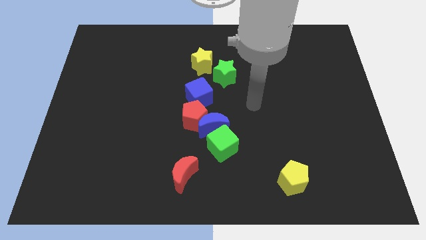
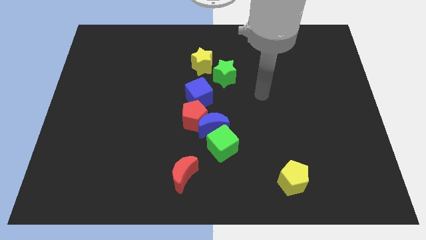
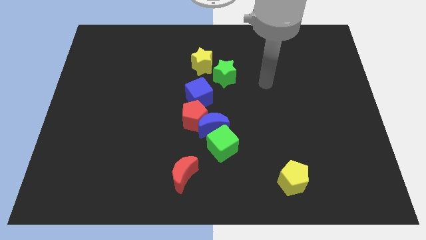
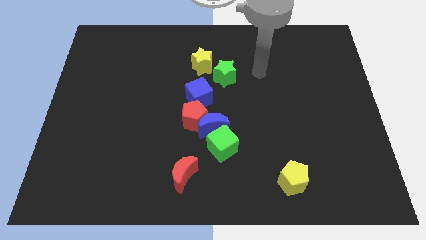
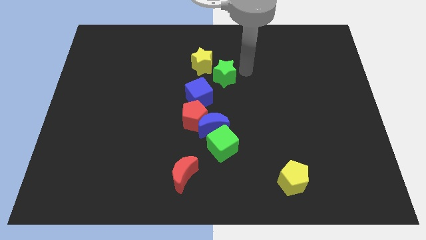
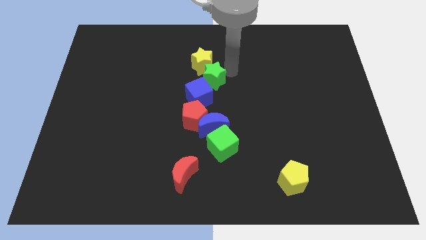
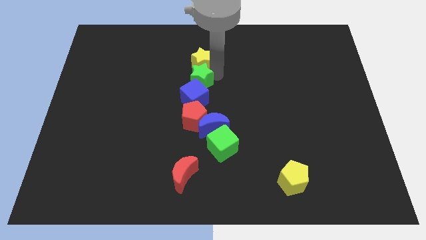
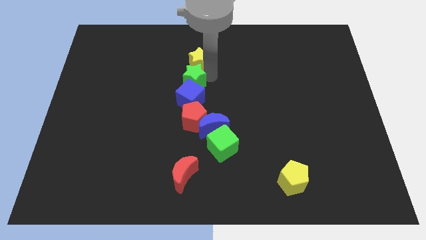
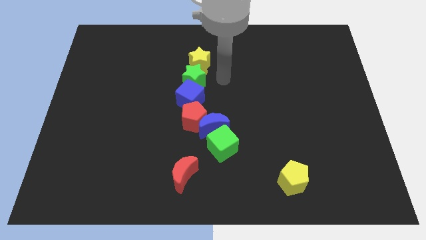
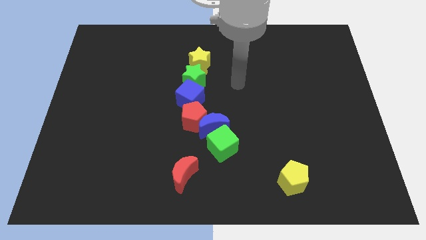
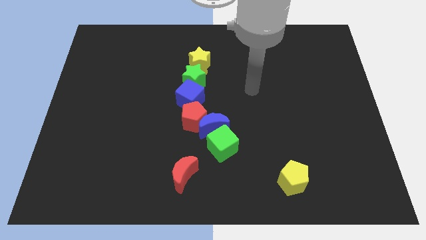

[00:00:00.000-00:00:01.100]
push green star close to yellow star

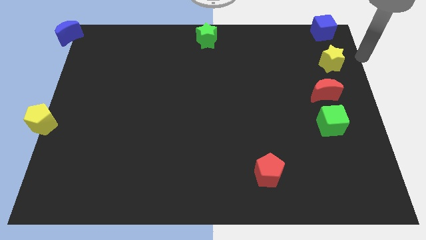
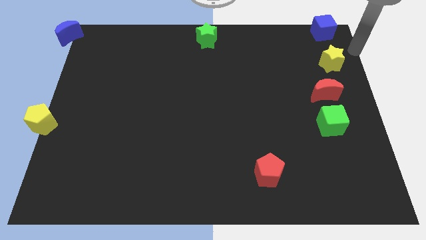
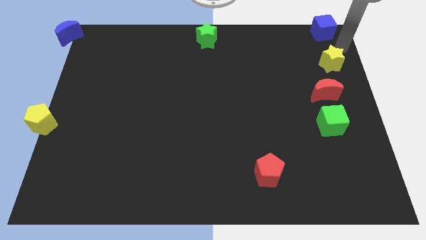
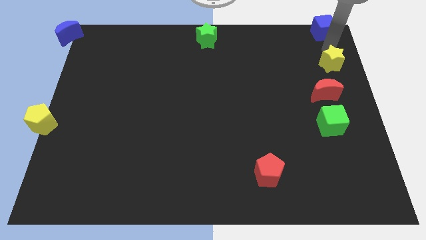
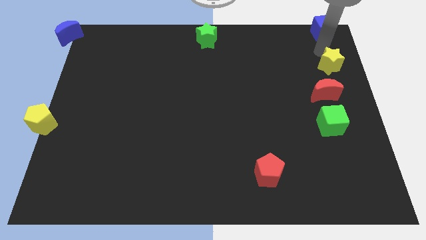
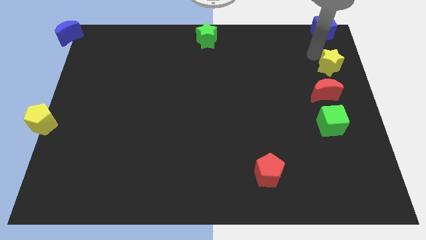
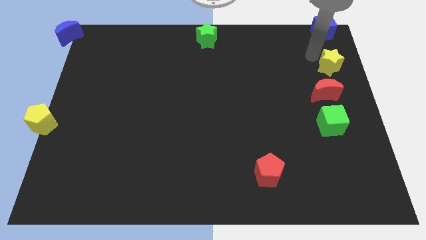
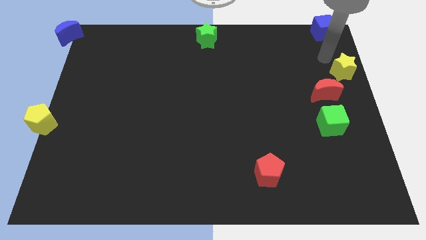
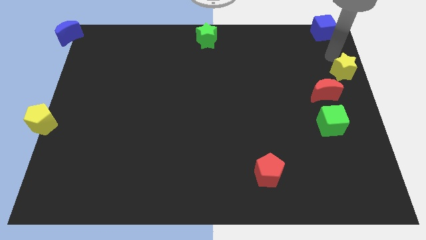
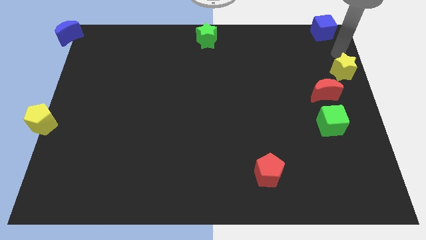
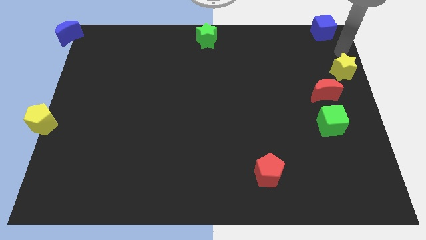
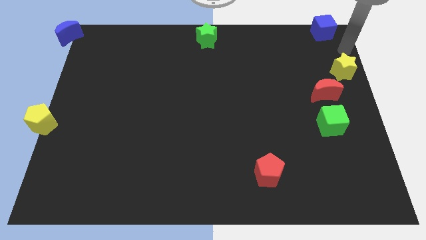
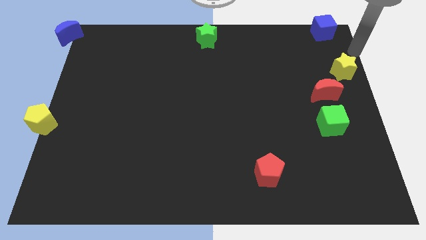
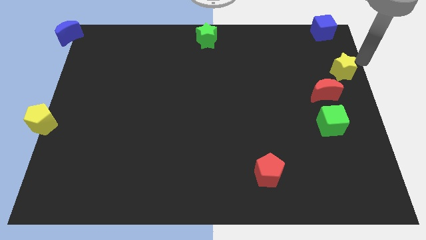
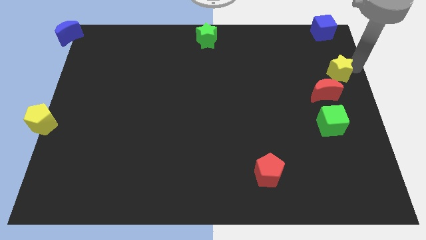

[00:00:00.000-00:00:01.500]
move the yellow star to the top right side of the red crescent

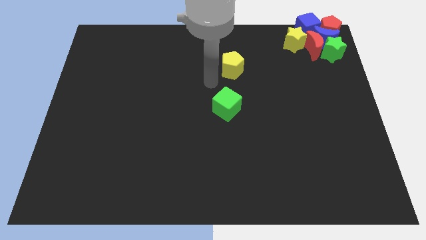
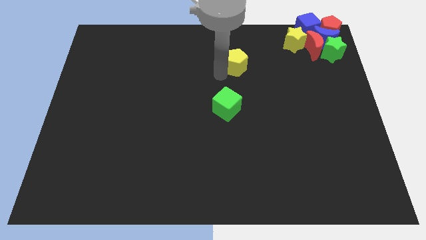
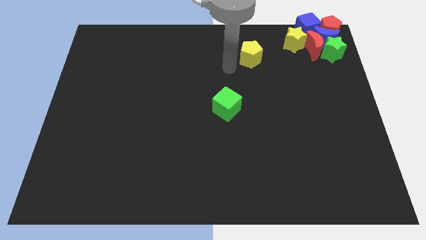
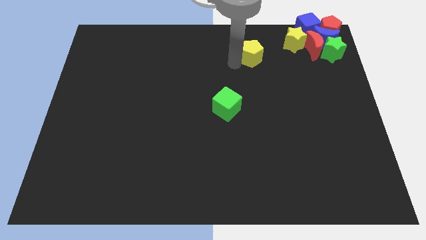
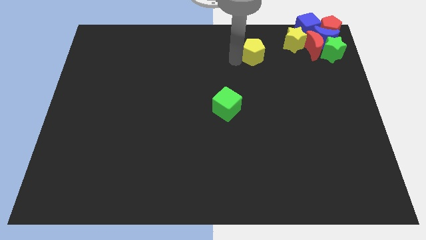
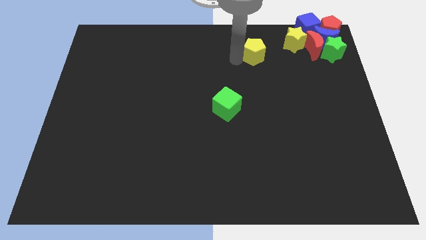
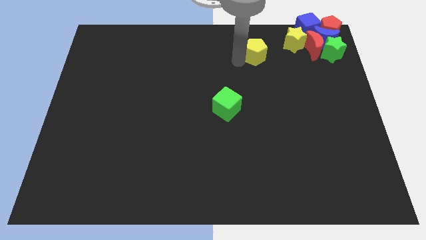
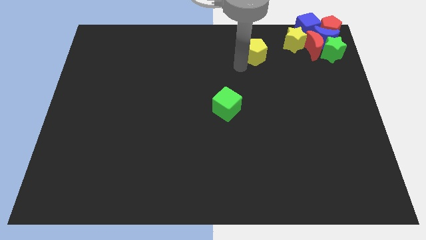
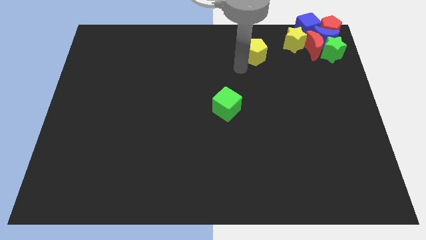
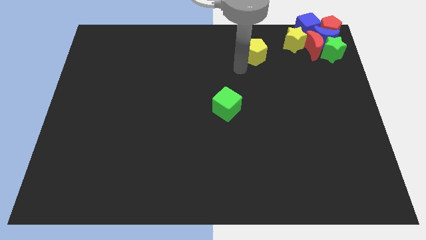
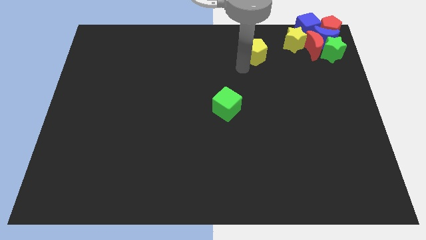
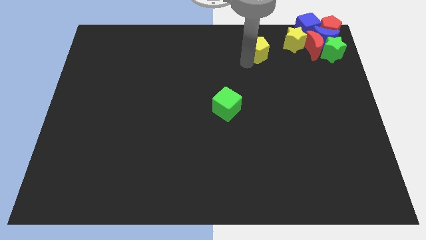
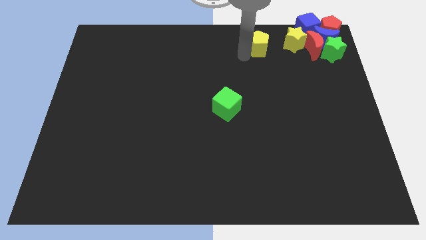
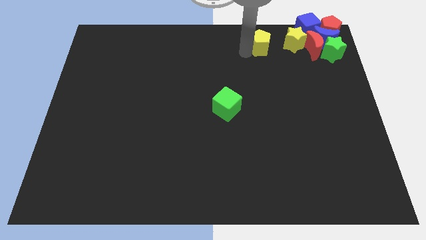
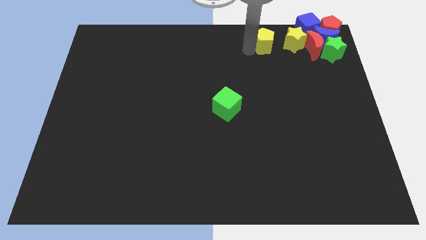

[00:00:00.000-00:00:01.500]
move the yellow pentagon to the left of the yellow star

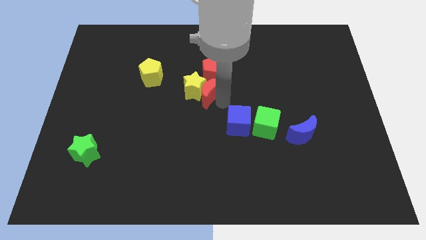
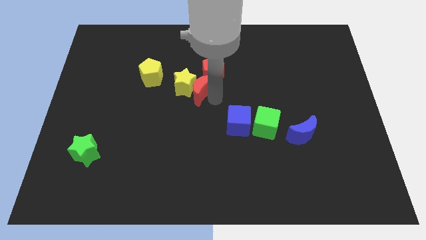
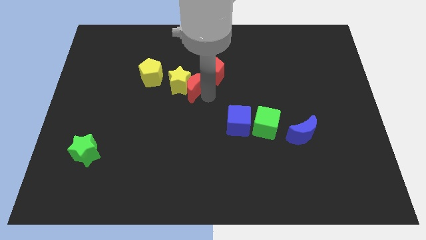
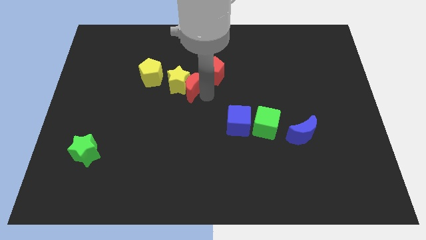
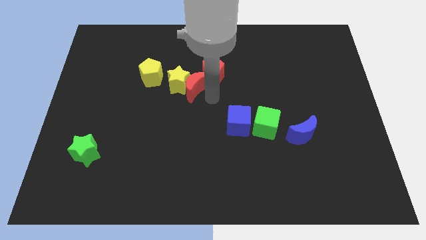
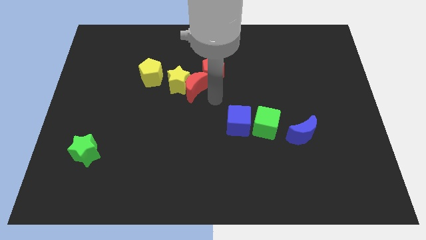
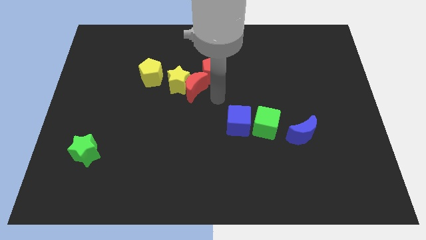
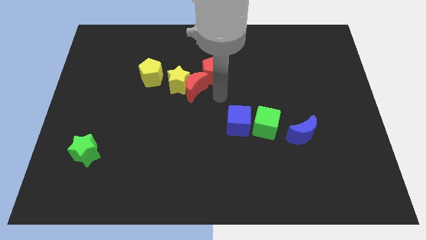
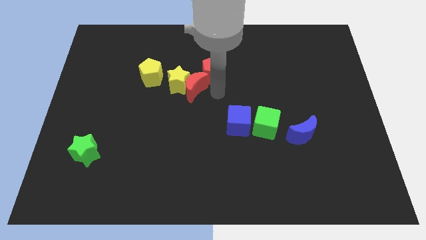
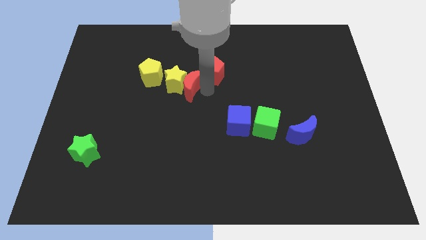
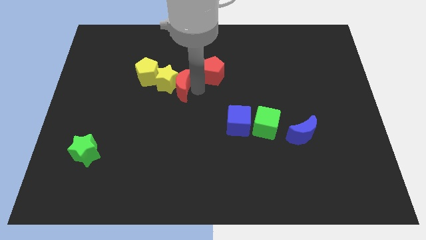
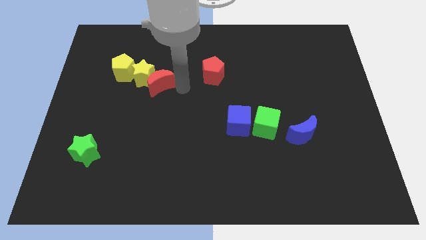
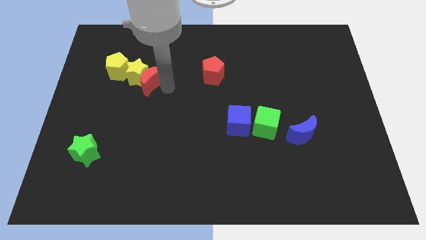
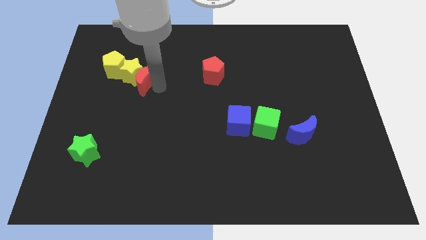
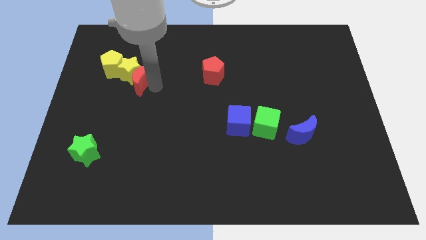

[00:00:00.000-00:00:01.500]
slide yellow star and red moon into the yellow pentagon

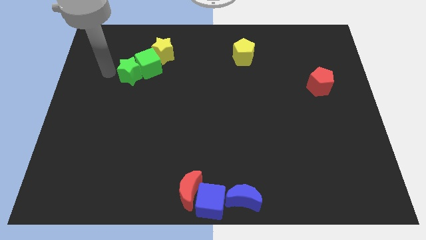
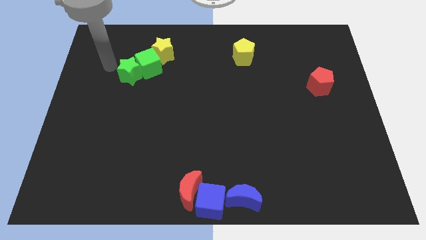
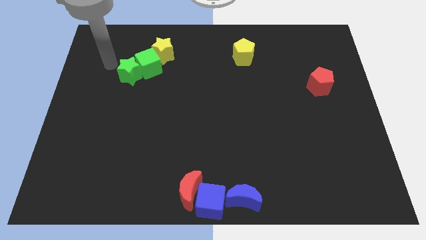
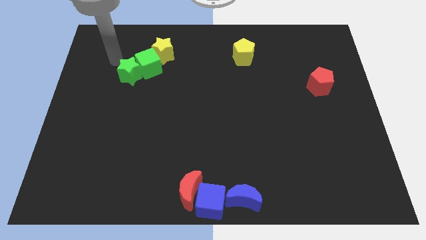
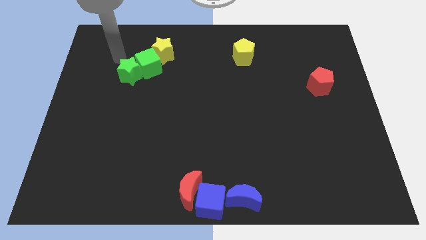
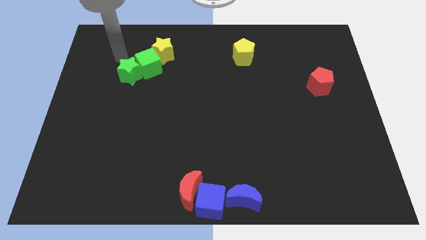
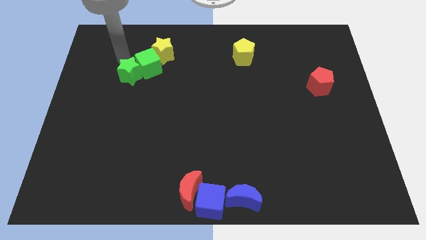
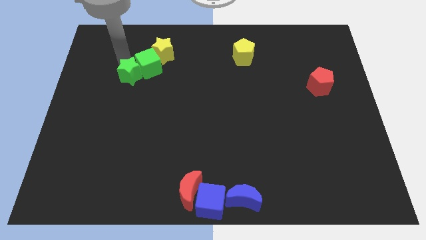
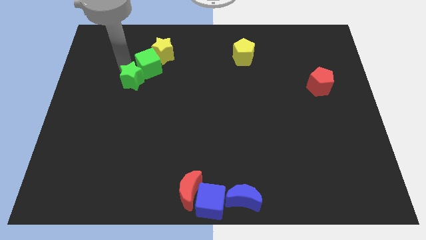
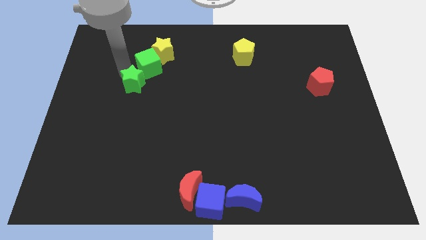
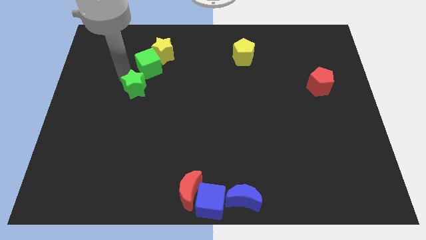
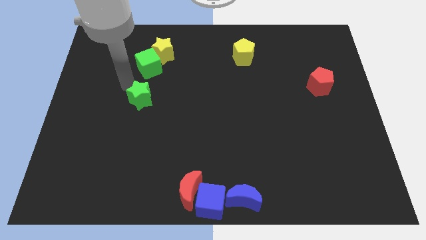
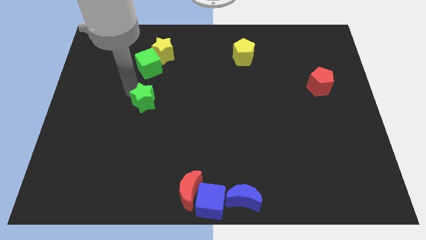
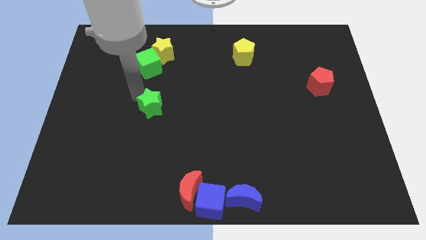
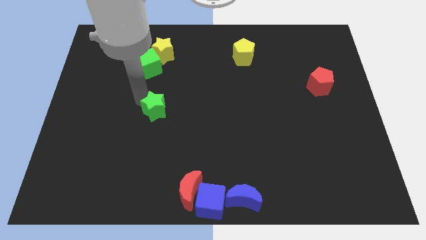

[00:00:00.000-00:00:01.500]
move the green star diagonal to the green cube

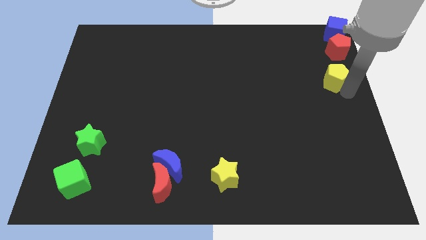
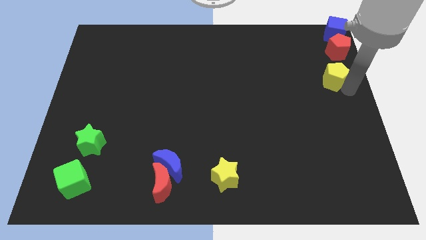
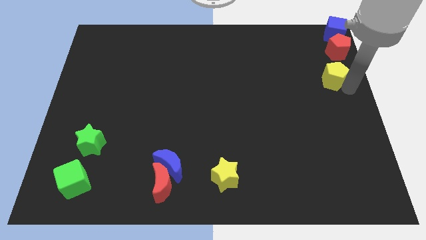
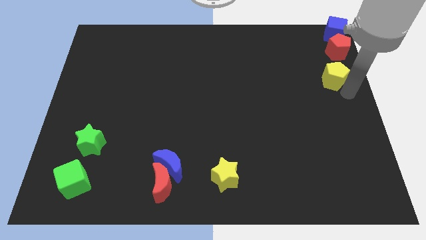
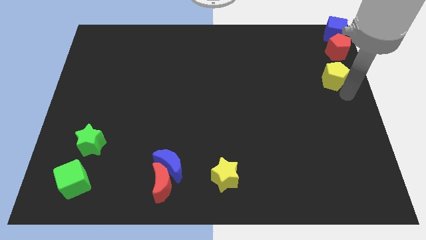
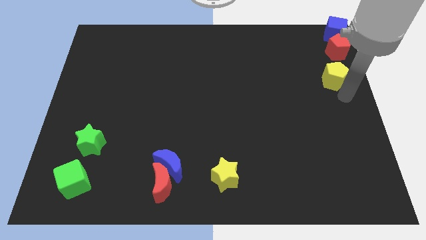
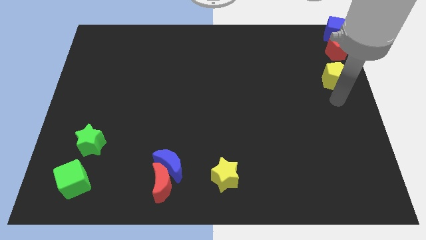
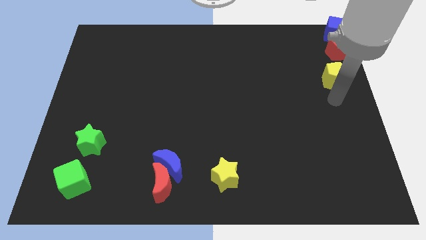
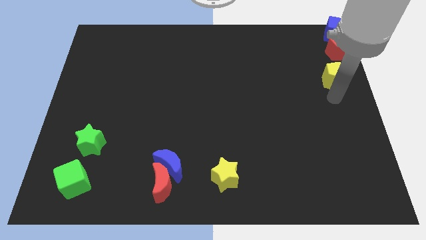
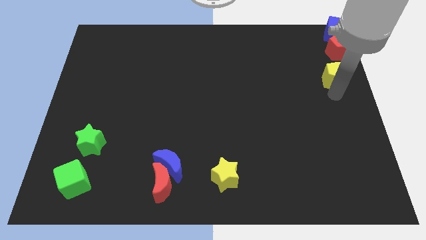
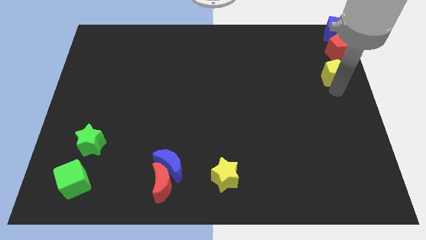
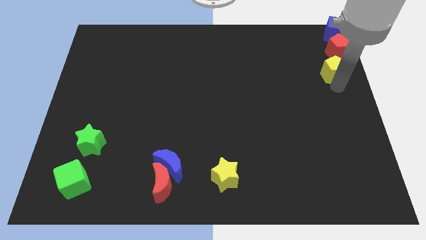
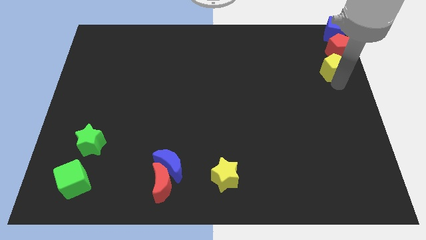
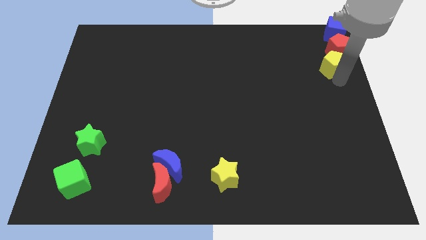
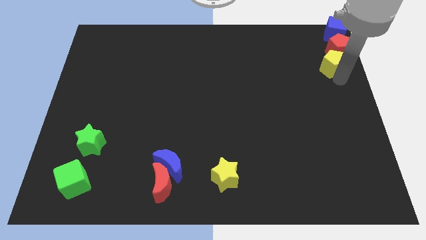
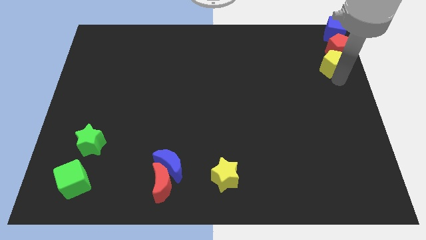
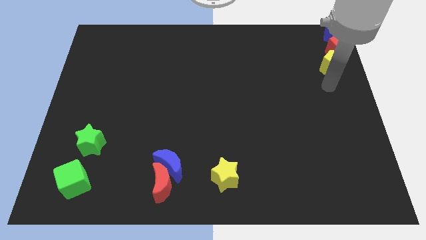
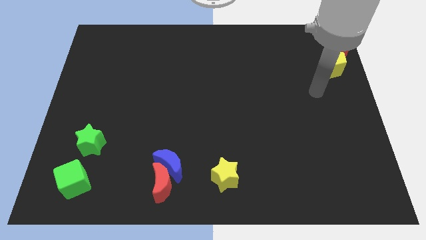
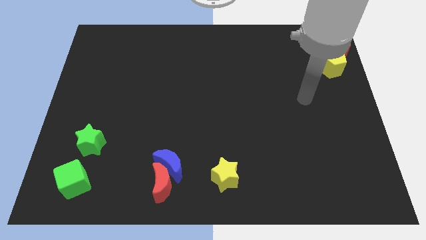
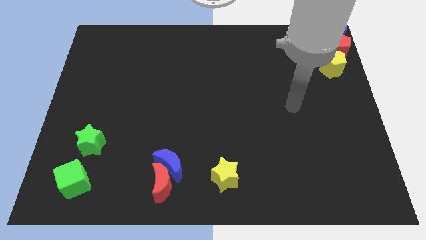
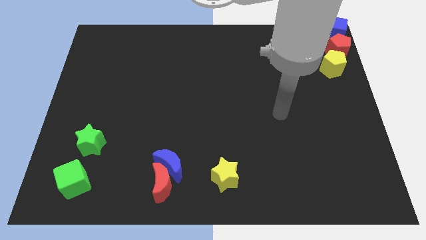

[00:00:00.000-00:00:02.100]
slide yellow pentagon into red pentagon
